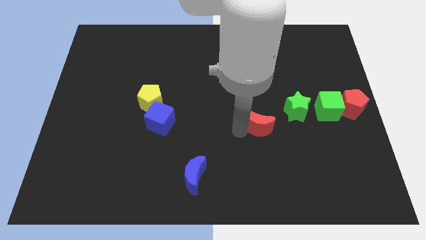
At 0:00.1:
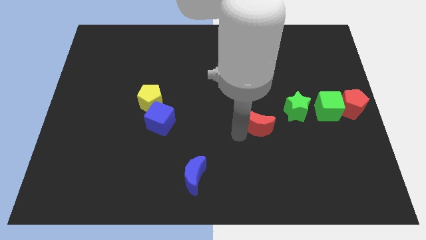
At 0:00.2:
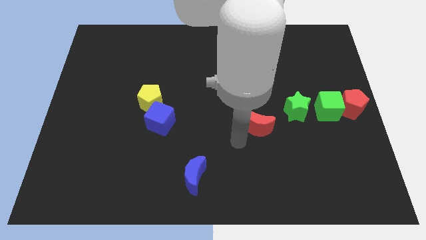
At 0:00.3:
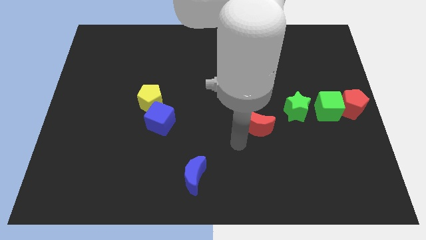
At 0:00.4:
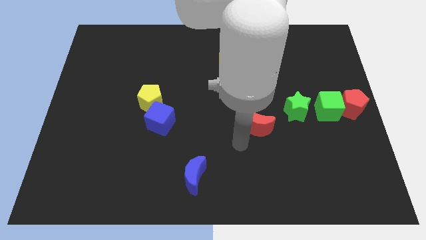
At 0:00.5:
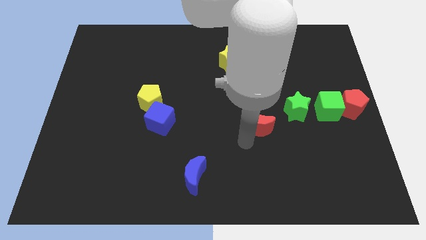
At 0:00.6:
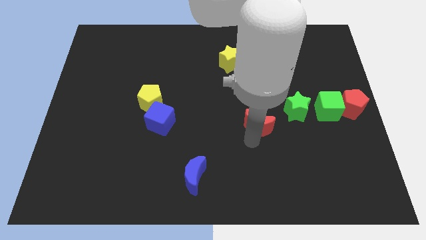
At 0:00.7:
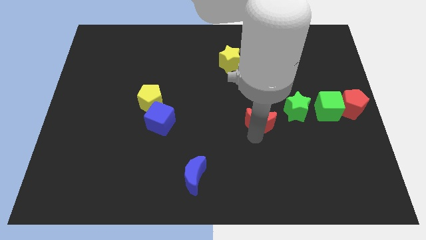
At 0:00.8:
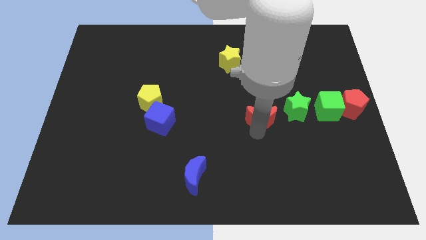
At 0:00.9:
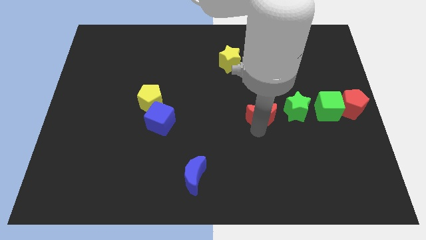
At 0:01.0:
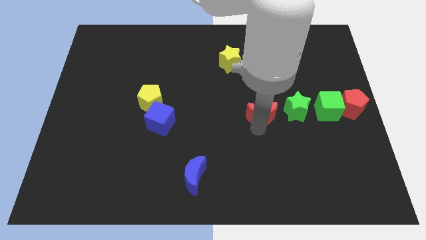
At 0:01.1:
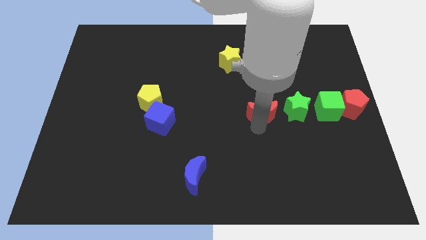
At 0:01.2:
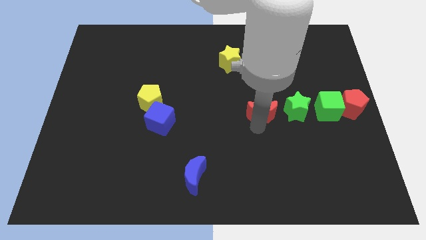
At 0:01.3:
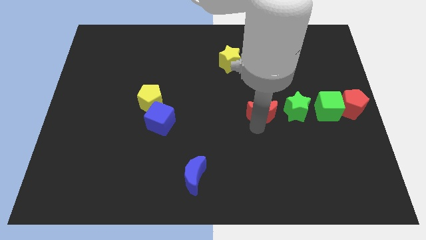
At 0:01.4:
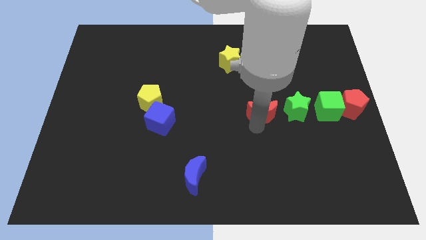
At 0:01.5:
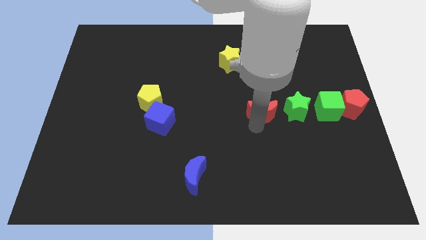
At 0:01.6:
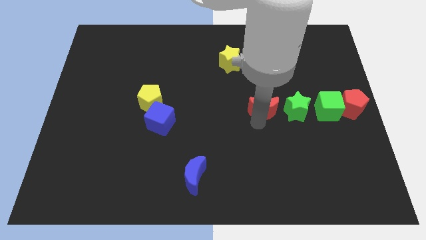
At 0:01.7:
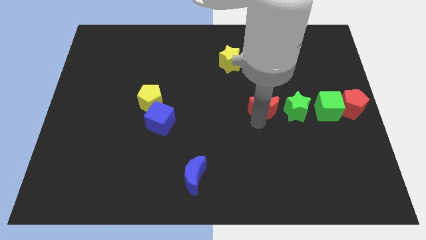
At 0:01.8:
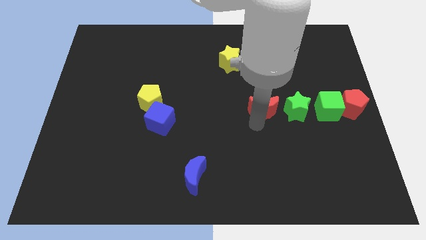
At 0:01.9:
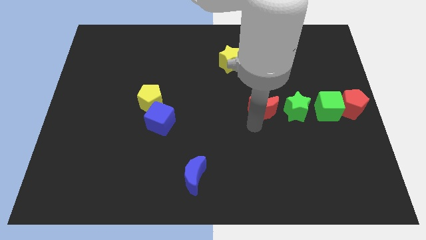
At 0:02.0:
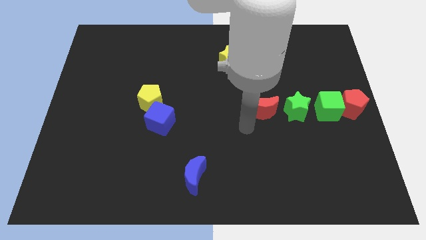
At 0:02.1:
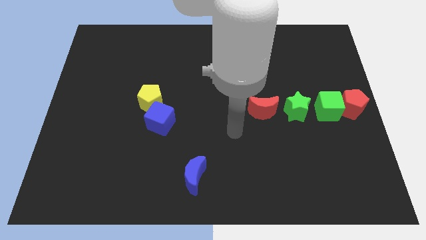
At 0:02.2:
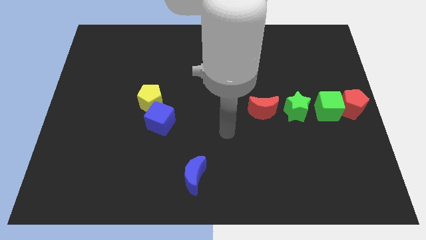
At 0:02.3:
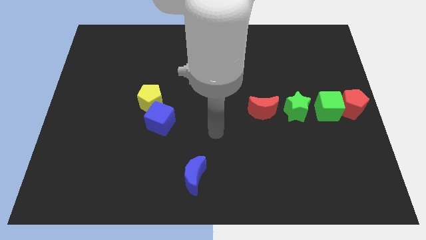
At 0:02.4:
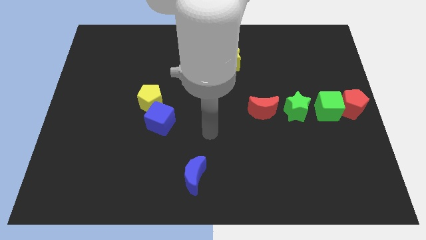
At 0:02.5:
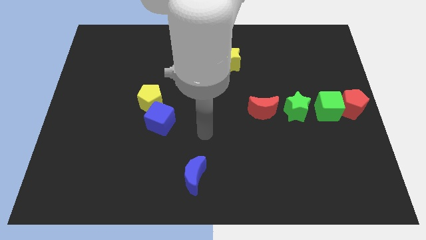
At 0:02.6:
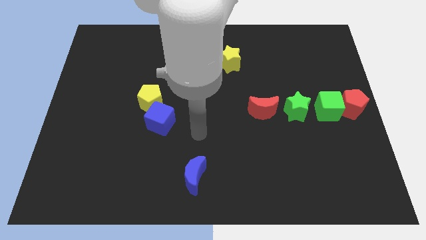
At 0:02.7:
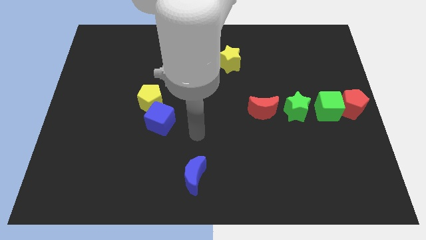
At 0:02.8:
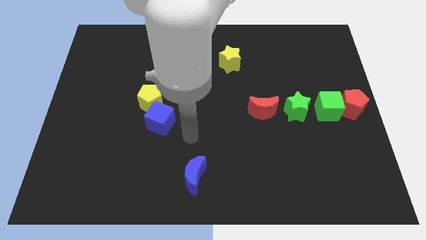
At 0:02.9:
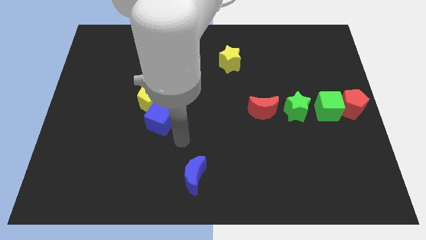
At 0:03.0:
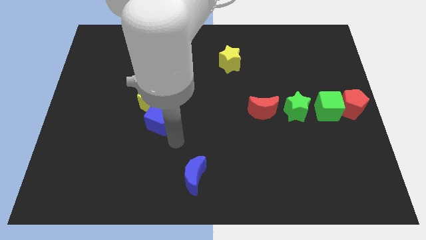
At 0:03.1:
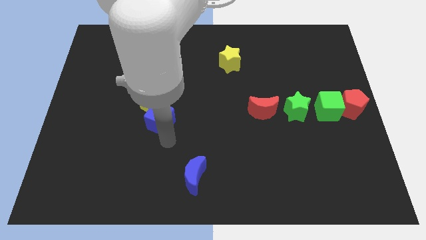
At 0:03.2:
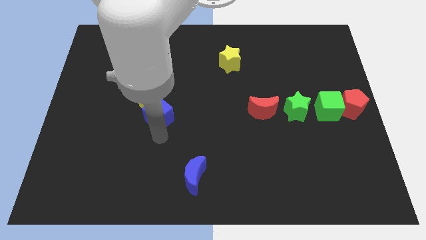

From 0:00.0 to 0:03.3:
place the arm down to the blue cube

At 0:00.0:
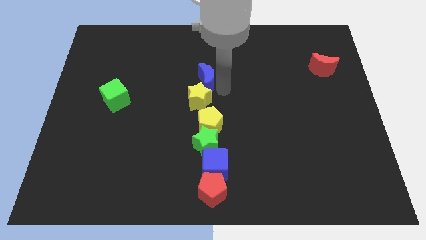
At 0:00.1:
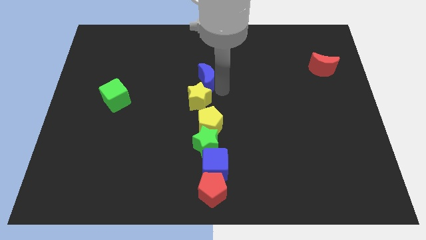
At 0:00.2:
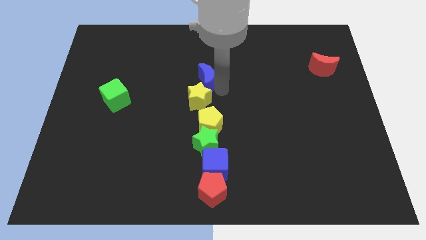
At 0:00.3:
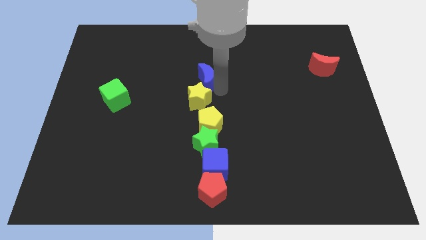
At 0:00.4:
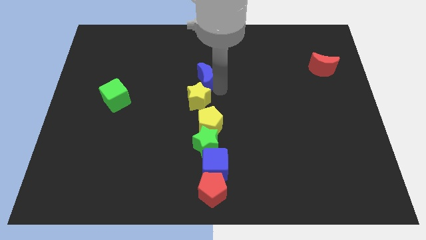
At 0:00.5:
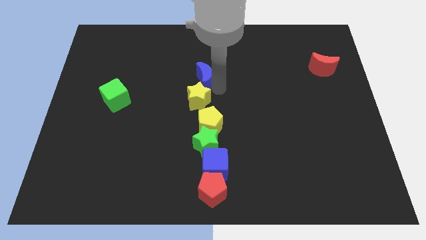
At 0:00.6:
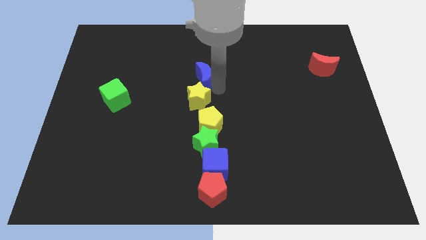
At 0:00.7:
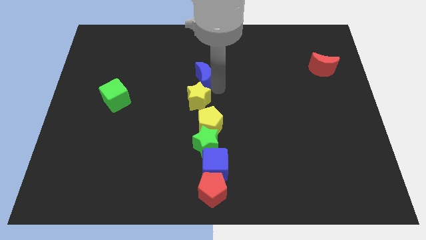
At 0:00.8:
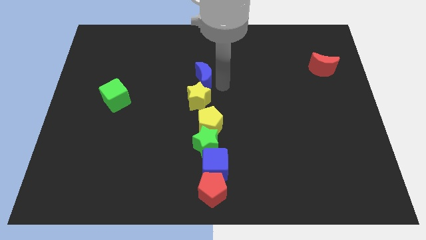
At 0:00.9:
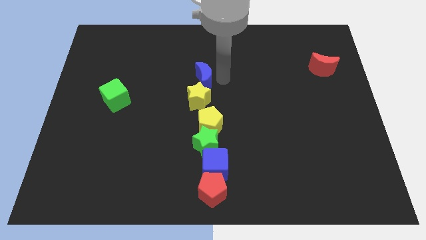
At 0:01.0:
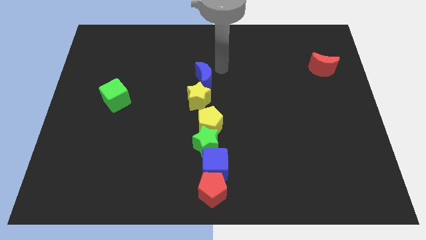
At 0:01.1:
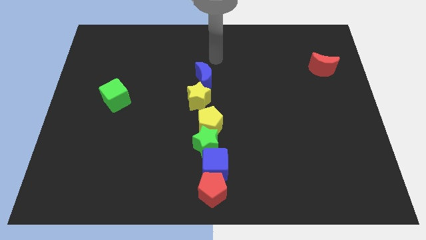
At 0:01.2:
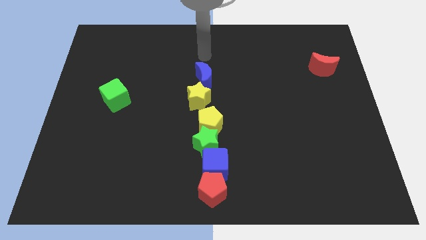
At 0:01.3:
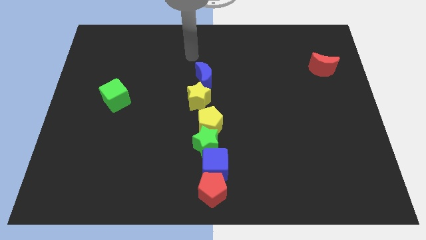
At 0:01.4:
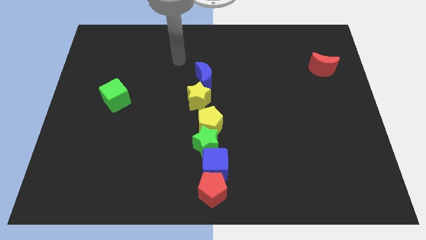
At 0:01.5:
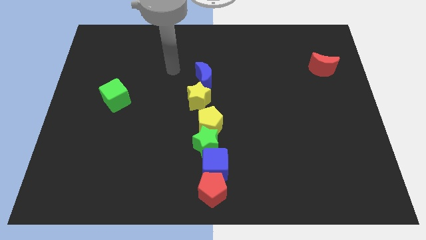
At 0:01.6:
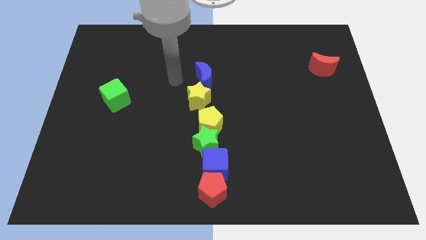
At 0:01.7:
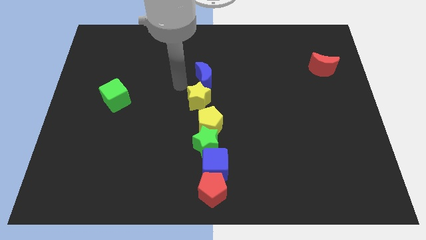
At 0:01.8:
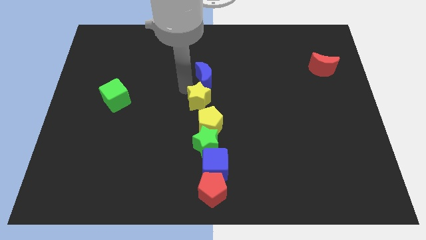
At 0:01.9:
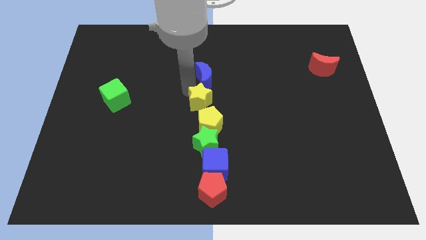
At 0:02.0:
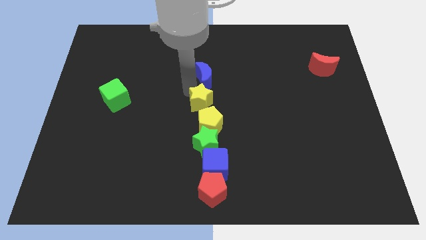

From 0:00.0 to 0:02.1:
slide the blue moon towards left

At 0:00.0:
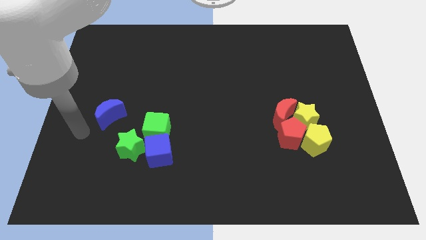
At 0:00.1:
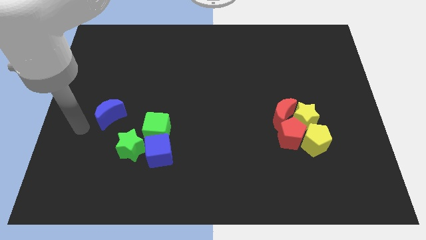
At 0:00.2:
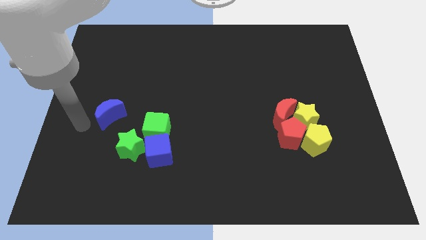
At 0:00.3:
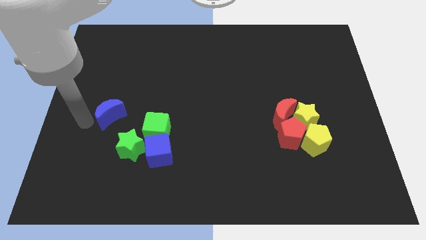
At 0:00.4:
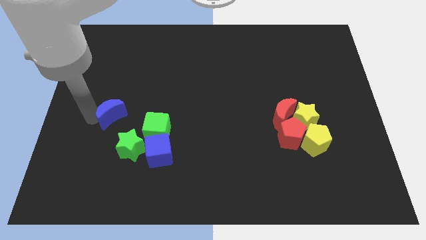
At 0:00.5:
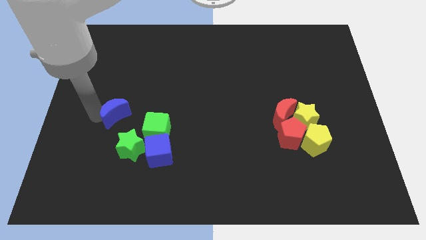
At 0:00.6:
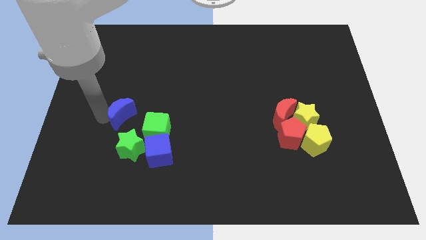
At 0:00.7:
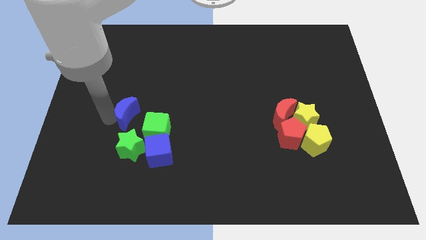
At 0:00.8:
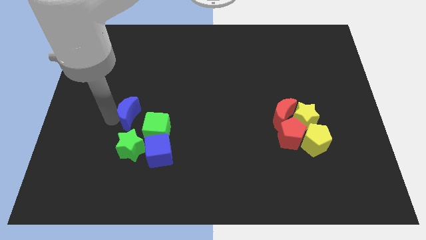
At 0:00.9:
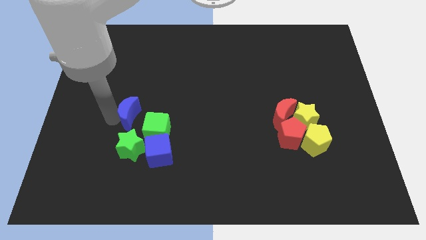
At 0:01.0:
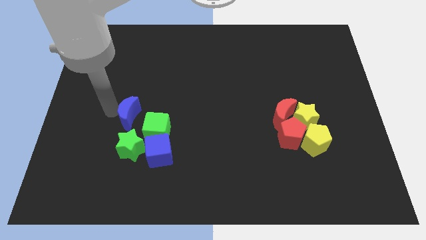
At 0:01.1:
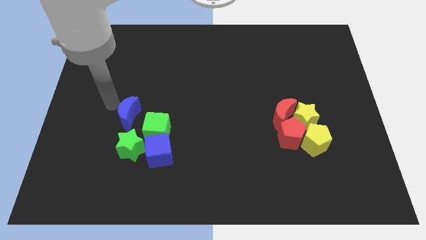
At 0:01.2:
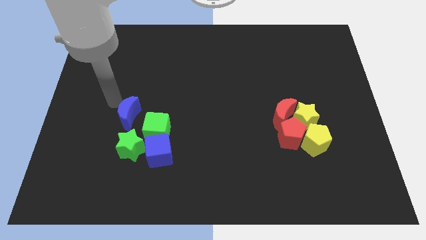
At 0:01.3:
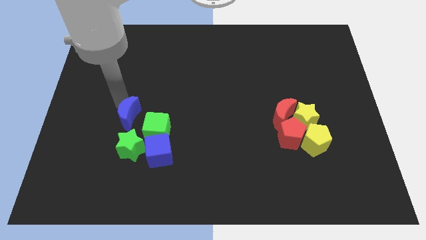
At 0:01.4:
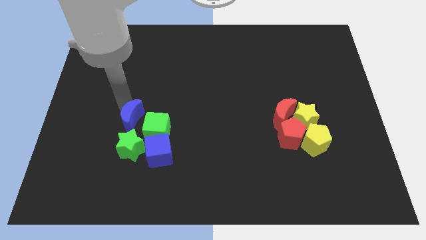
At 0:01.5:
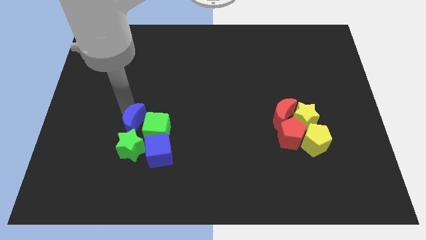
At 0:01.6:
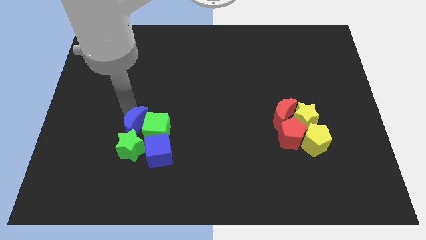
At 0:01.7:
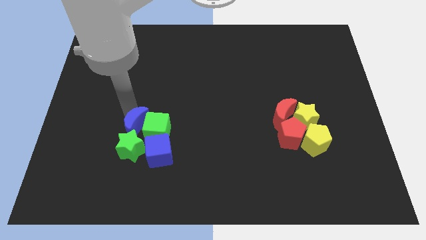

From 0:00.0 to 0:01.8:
push the blue moon into the green blocks

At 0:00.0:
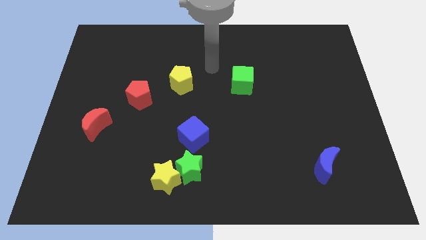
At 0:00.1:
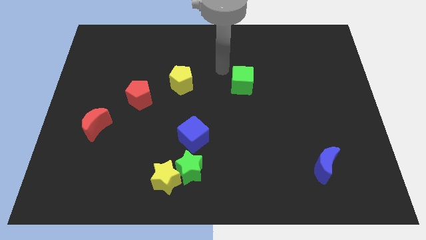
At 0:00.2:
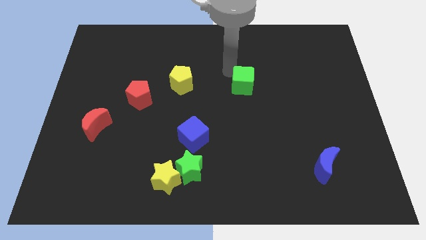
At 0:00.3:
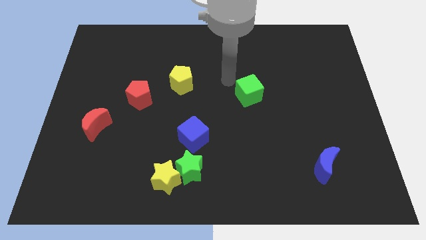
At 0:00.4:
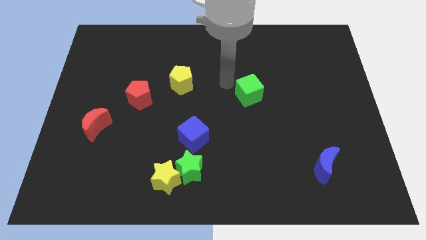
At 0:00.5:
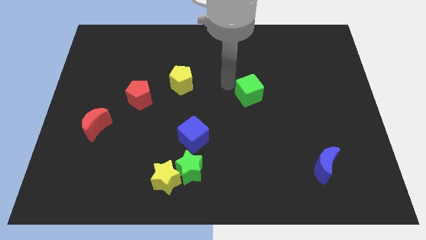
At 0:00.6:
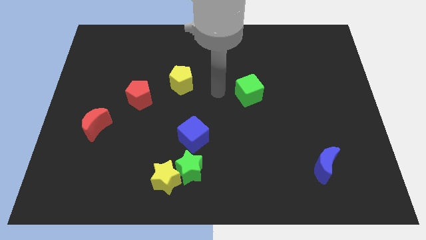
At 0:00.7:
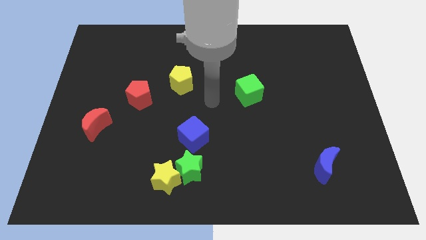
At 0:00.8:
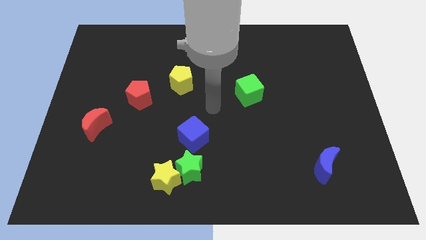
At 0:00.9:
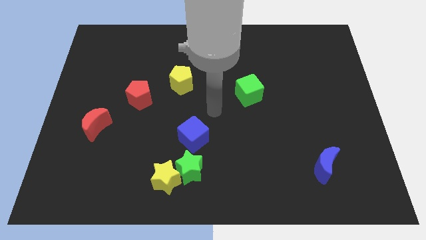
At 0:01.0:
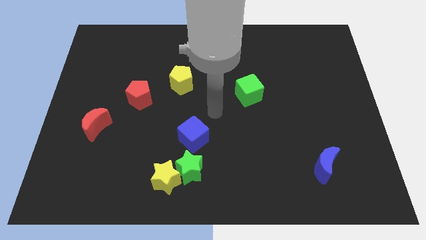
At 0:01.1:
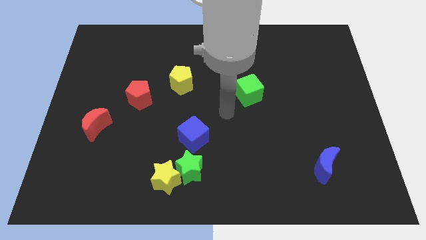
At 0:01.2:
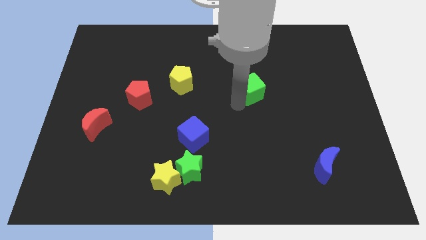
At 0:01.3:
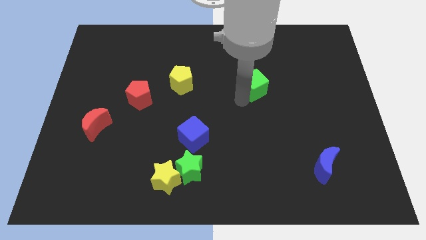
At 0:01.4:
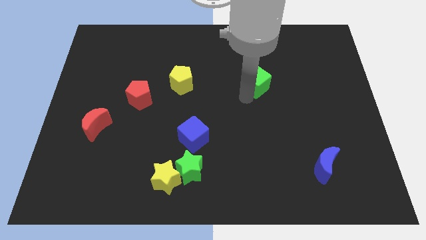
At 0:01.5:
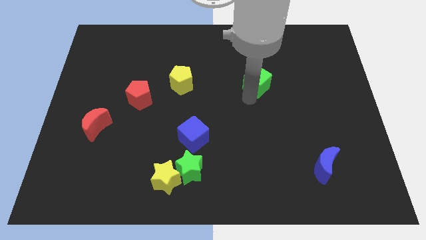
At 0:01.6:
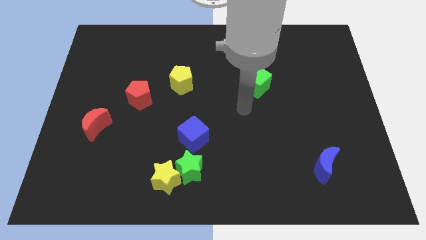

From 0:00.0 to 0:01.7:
push the green cube towards the top side of the board
